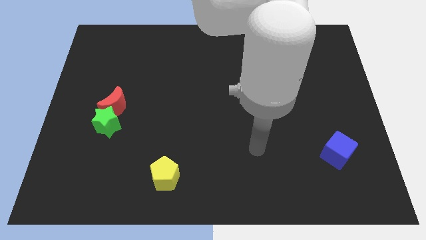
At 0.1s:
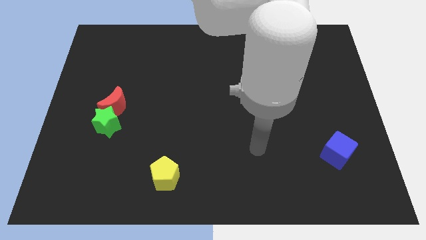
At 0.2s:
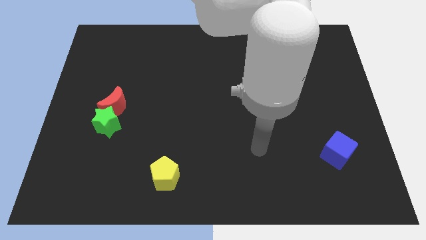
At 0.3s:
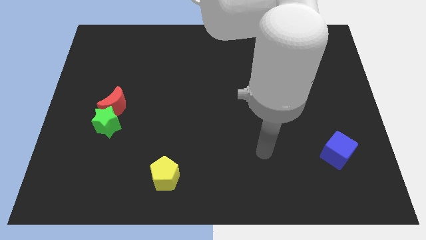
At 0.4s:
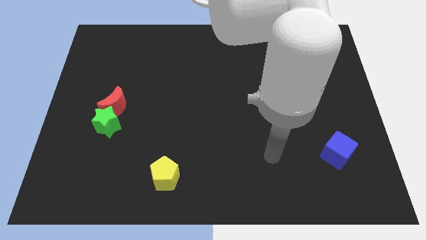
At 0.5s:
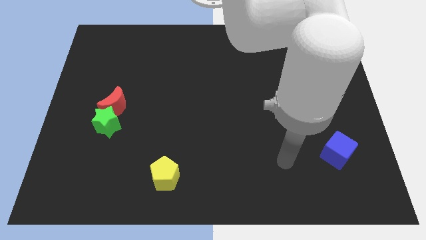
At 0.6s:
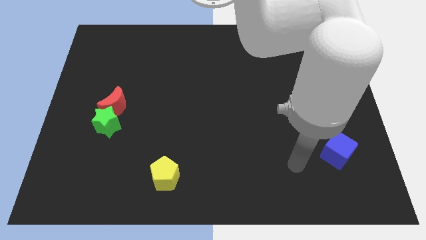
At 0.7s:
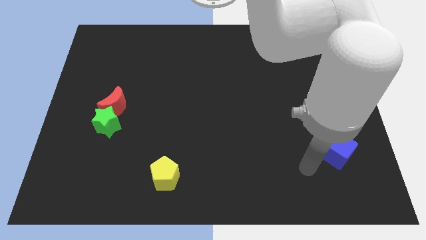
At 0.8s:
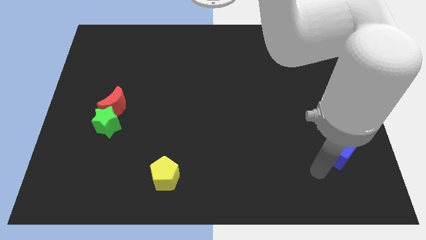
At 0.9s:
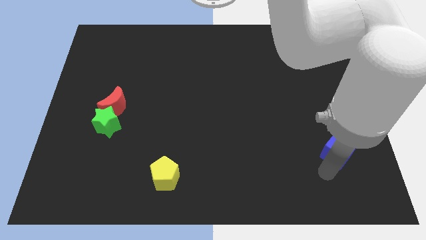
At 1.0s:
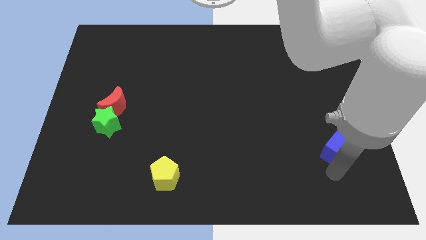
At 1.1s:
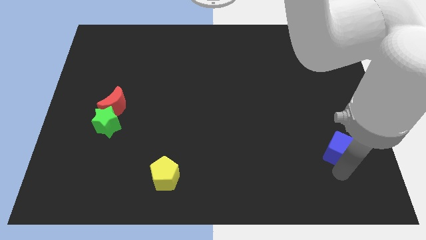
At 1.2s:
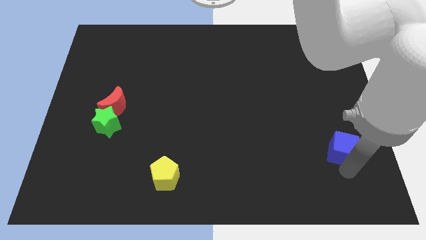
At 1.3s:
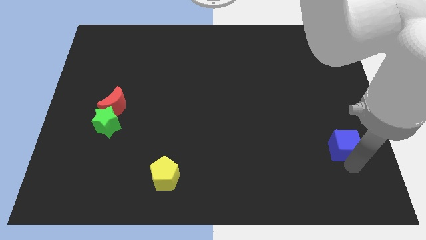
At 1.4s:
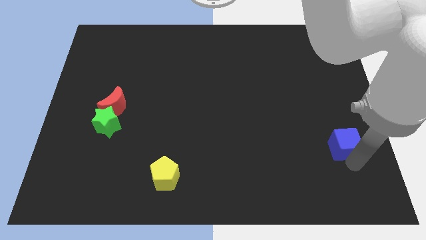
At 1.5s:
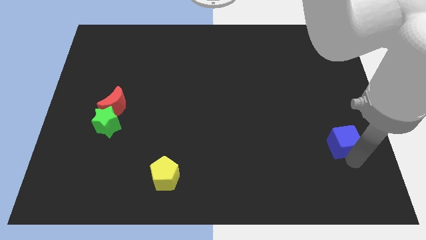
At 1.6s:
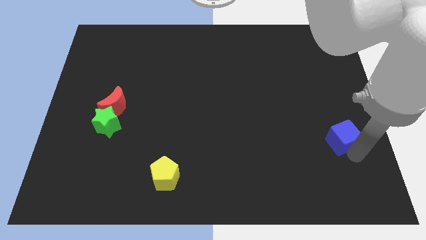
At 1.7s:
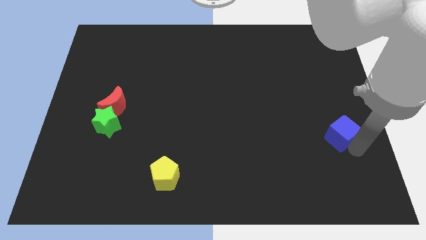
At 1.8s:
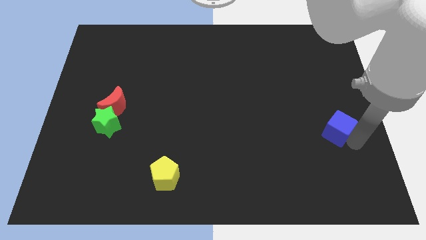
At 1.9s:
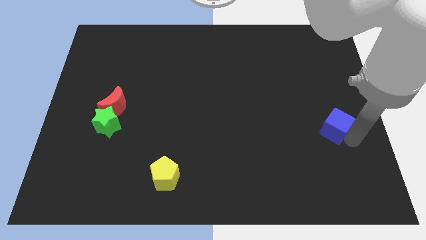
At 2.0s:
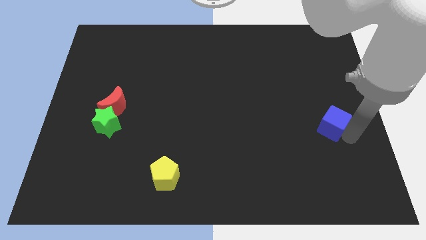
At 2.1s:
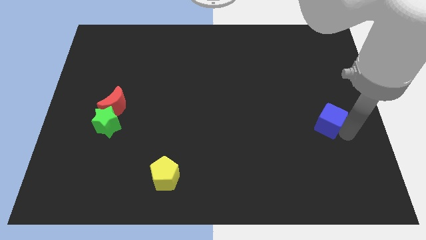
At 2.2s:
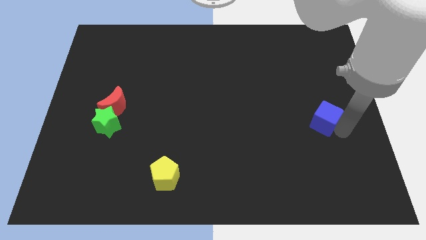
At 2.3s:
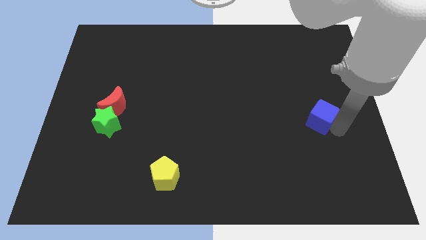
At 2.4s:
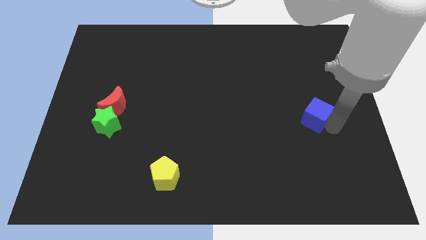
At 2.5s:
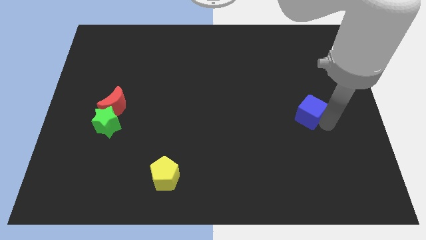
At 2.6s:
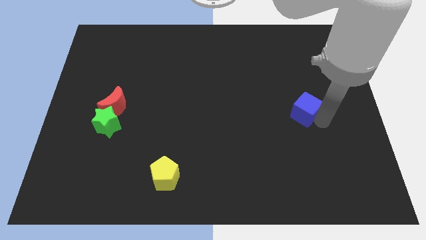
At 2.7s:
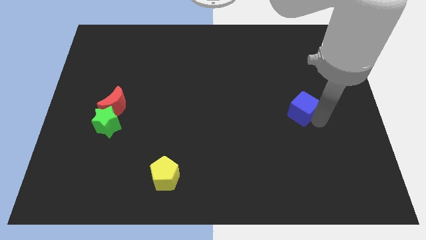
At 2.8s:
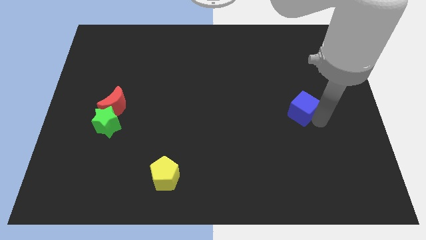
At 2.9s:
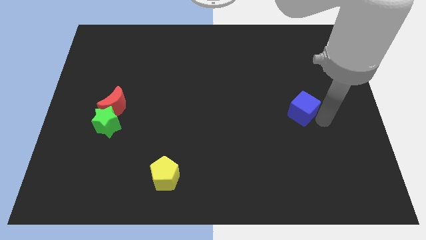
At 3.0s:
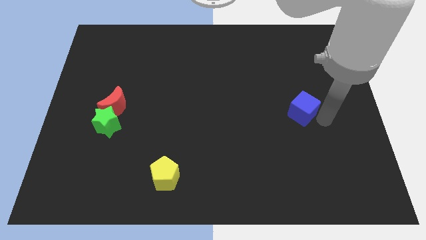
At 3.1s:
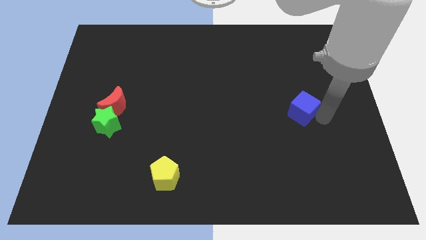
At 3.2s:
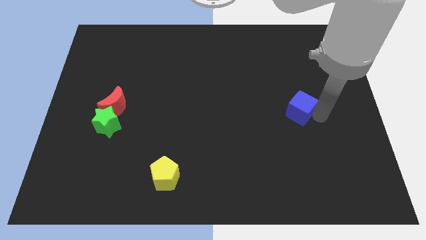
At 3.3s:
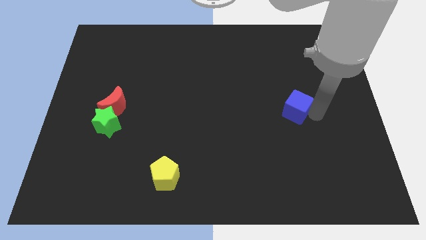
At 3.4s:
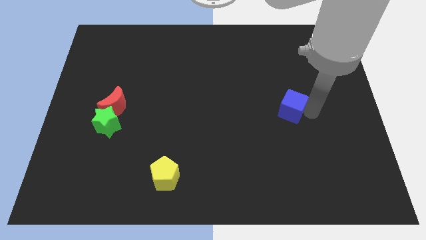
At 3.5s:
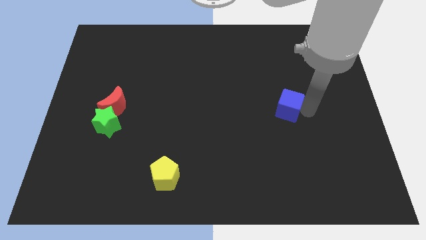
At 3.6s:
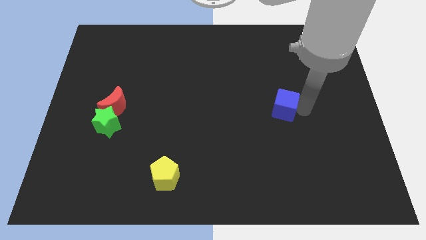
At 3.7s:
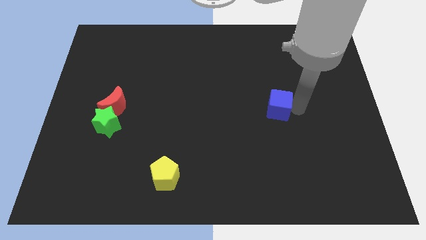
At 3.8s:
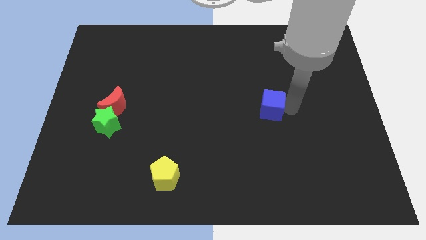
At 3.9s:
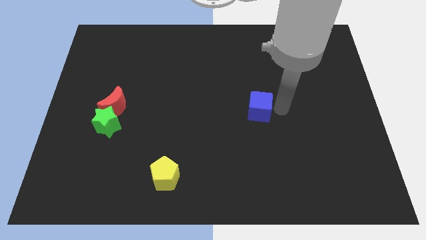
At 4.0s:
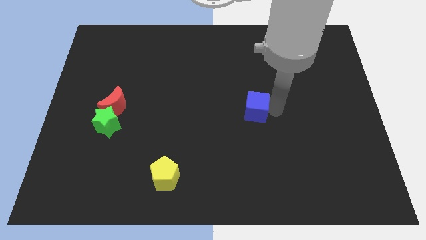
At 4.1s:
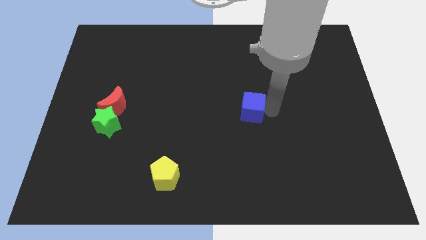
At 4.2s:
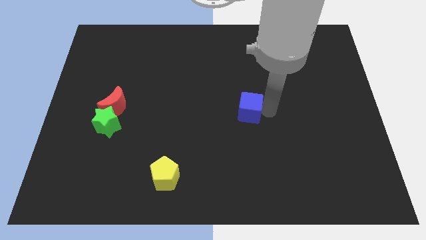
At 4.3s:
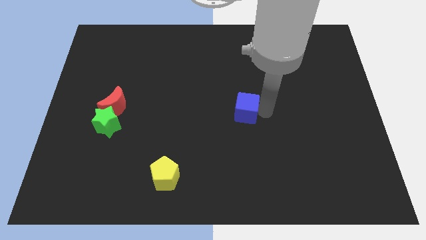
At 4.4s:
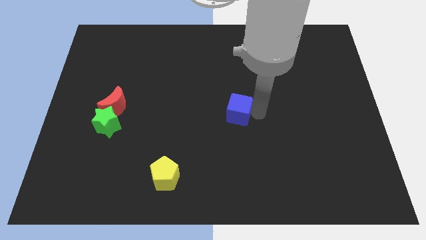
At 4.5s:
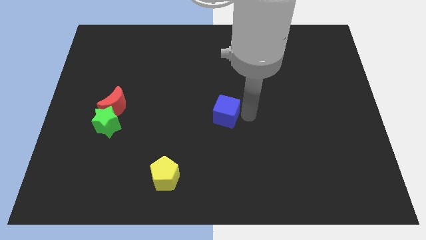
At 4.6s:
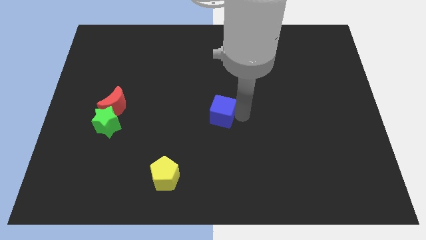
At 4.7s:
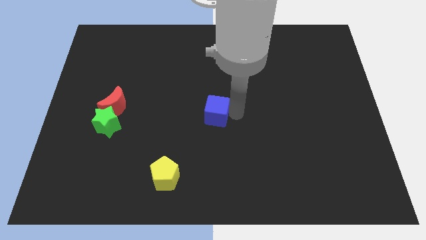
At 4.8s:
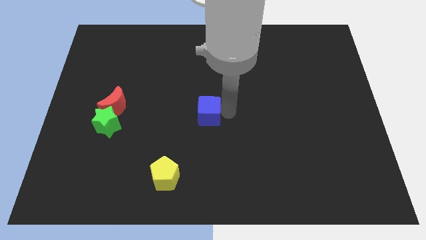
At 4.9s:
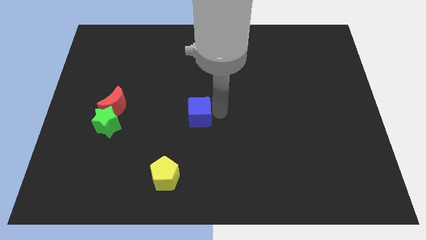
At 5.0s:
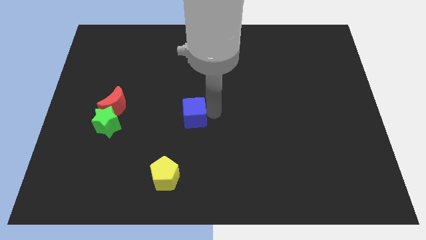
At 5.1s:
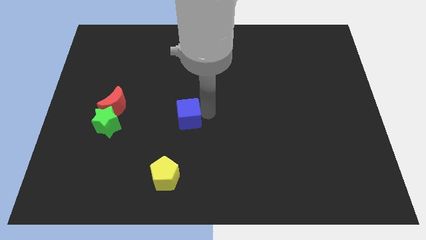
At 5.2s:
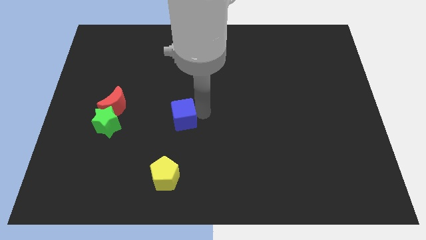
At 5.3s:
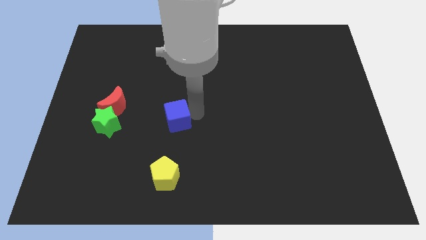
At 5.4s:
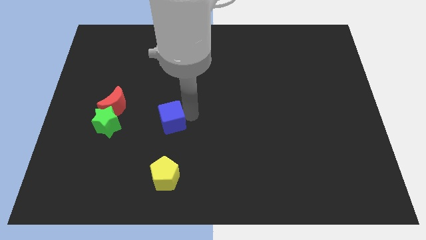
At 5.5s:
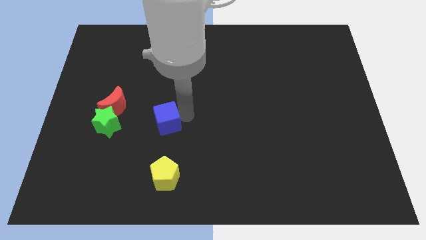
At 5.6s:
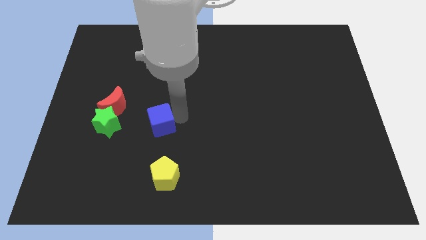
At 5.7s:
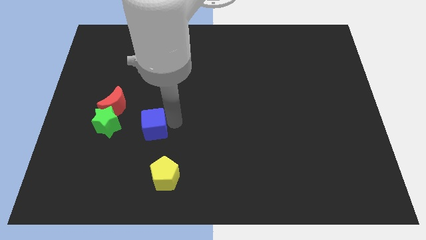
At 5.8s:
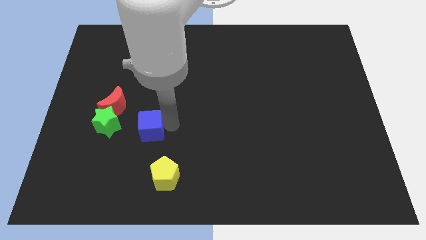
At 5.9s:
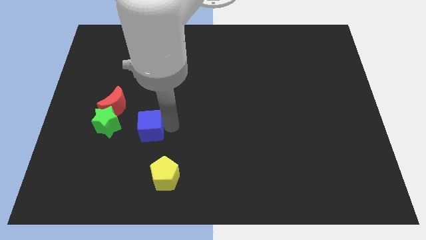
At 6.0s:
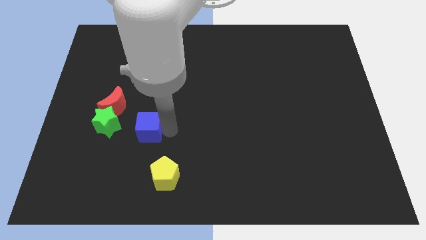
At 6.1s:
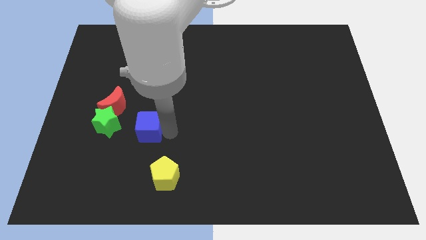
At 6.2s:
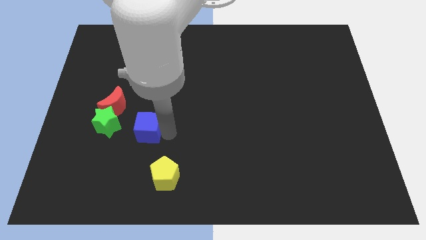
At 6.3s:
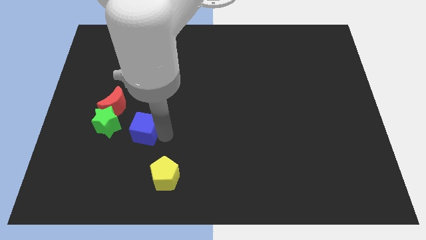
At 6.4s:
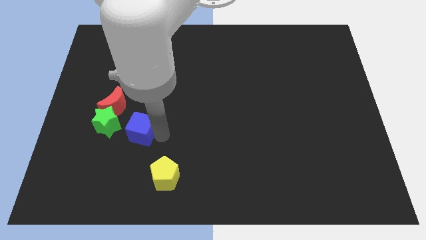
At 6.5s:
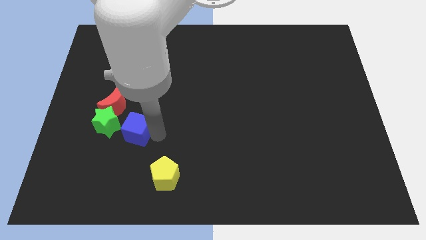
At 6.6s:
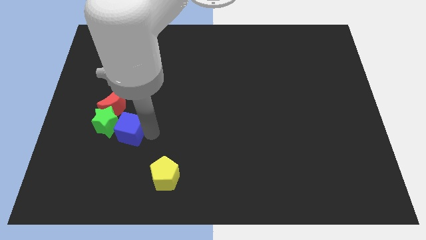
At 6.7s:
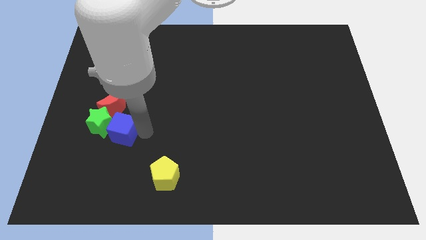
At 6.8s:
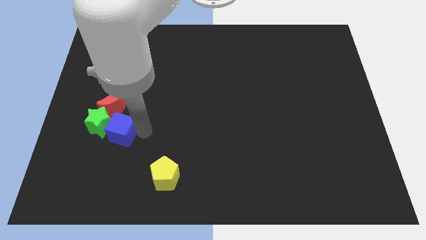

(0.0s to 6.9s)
move the blue block close to the green block

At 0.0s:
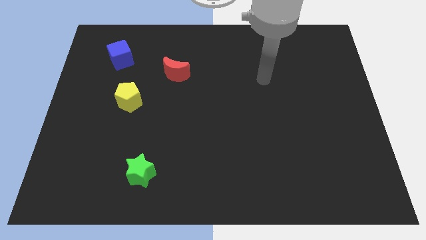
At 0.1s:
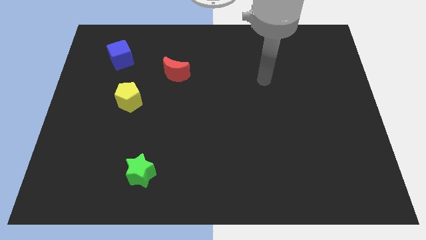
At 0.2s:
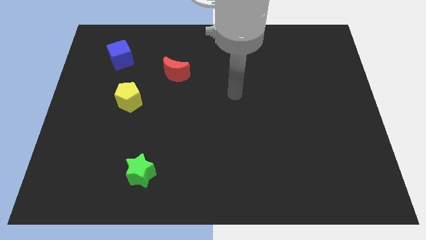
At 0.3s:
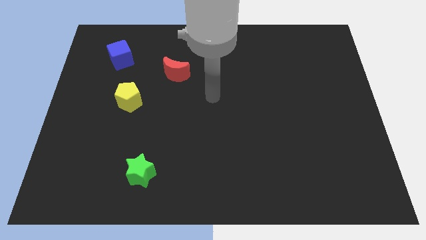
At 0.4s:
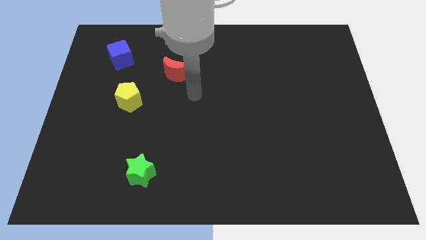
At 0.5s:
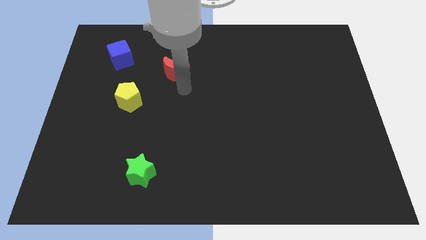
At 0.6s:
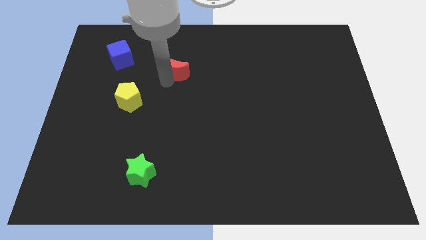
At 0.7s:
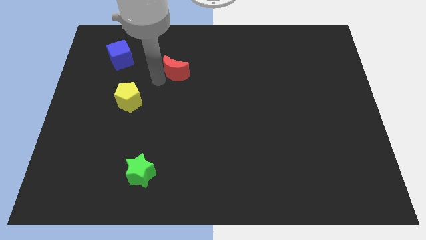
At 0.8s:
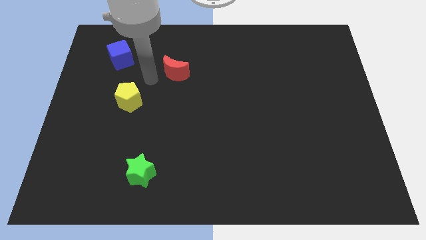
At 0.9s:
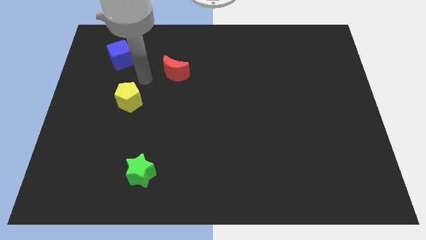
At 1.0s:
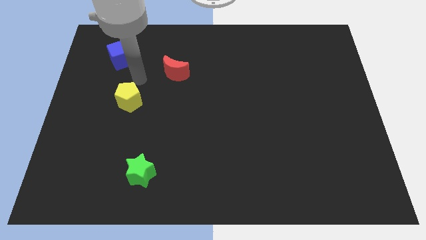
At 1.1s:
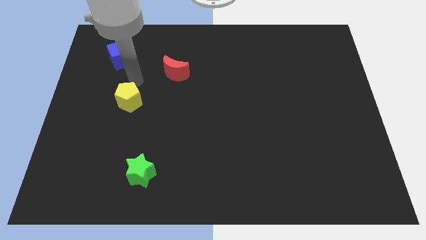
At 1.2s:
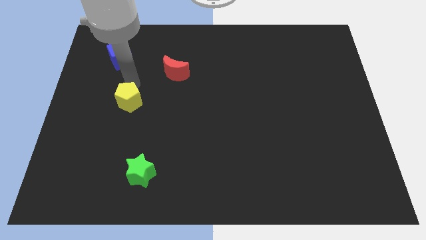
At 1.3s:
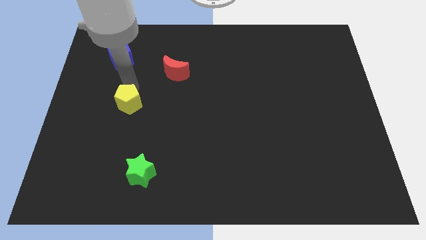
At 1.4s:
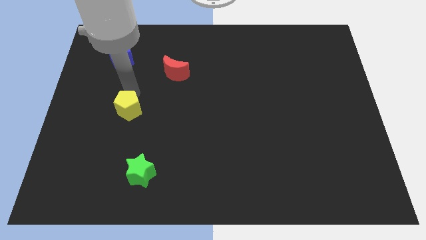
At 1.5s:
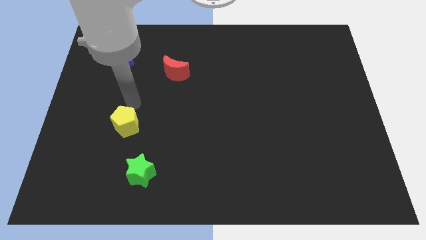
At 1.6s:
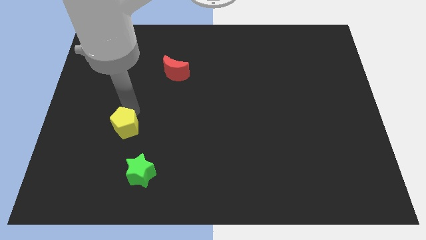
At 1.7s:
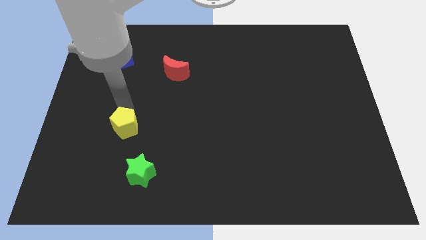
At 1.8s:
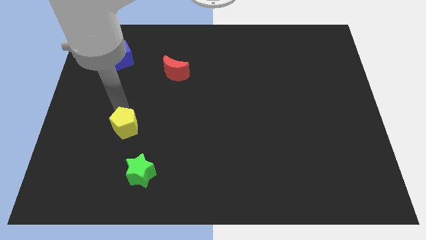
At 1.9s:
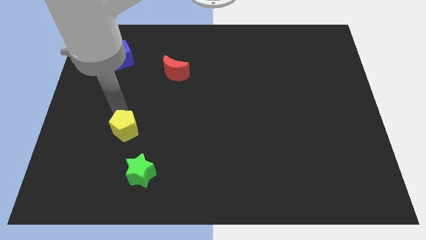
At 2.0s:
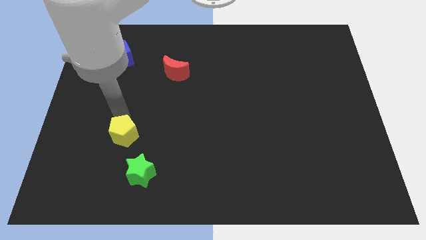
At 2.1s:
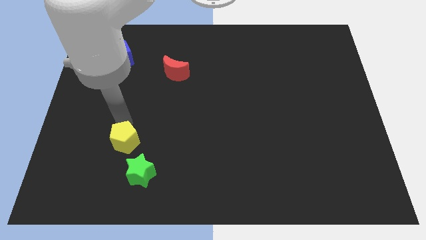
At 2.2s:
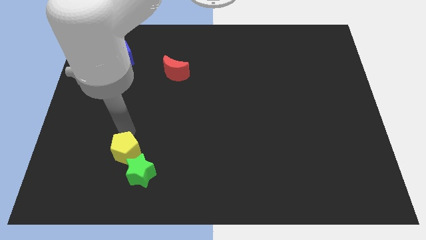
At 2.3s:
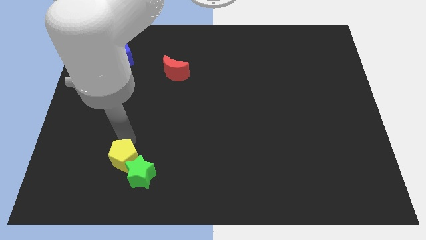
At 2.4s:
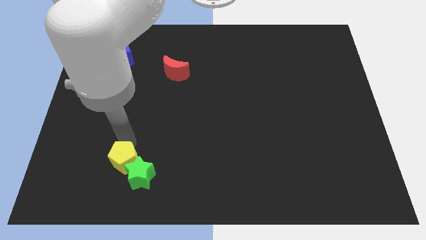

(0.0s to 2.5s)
move the yellow pentagon close to the star
